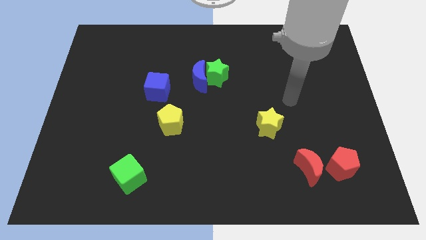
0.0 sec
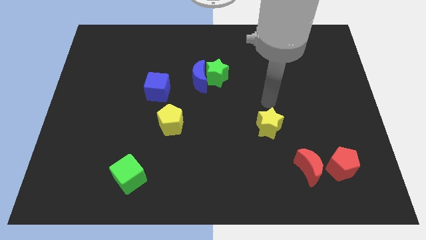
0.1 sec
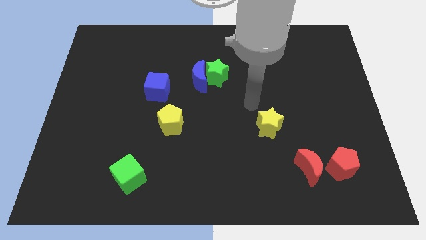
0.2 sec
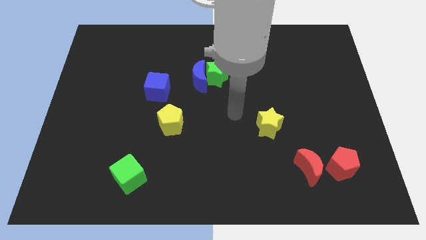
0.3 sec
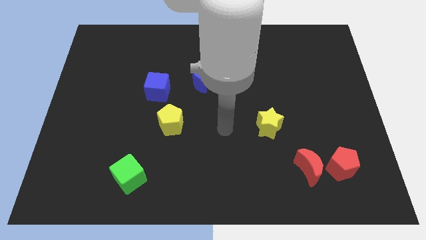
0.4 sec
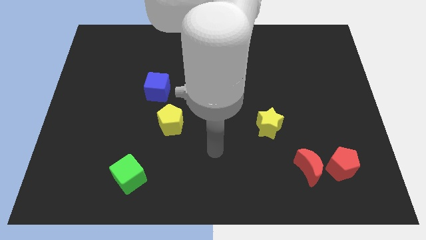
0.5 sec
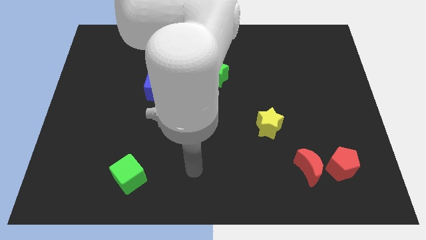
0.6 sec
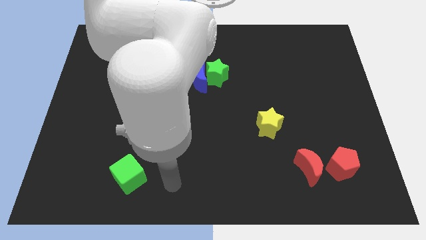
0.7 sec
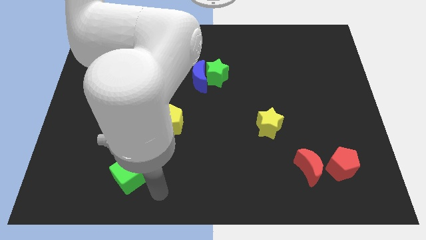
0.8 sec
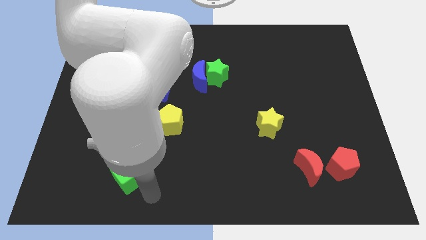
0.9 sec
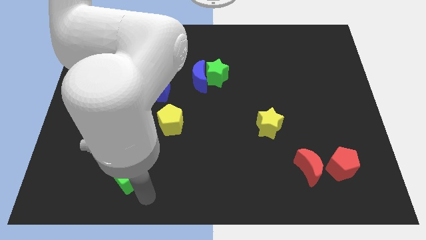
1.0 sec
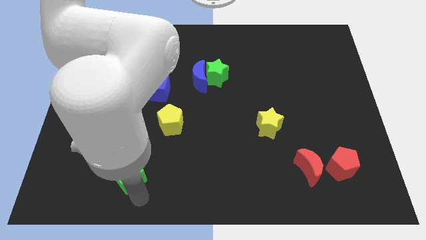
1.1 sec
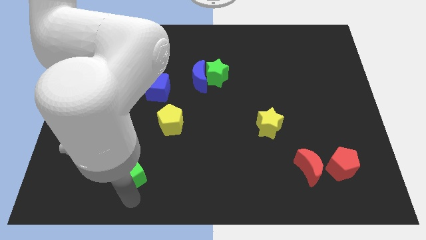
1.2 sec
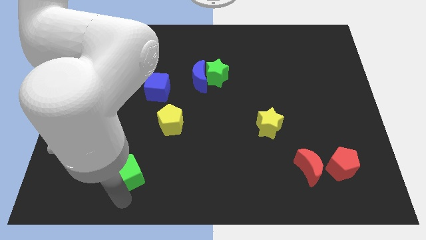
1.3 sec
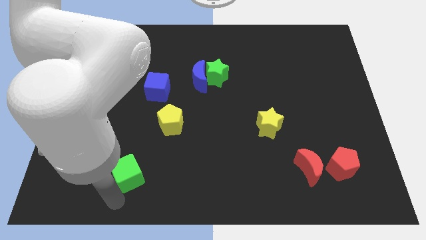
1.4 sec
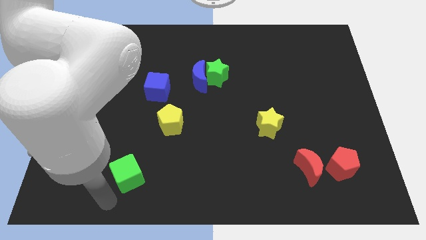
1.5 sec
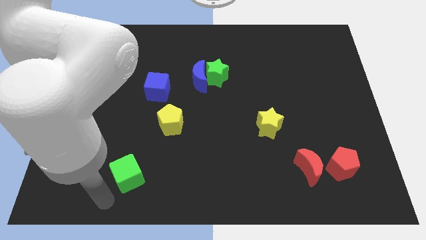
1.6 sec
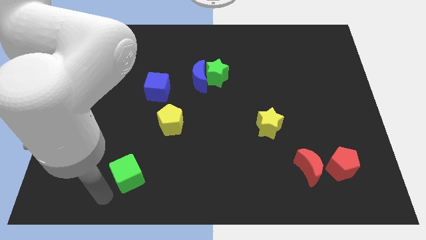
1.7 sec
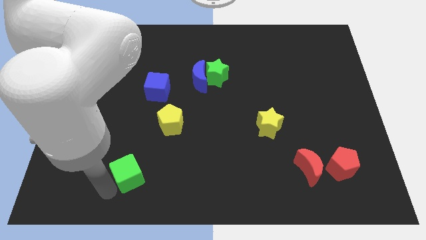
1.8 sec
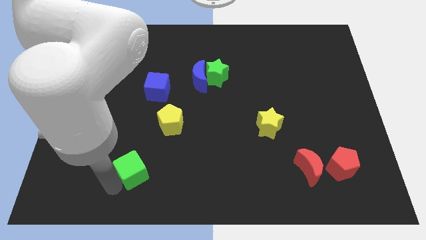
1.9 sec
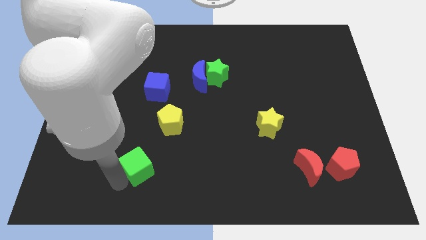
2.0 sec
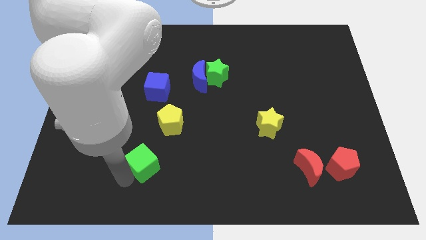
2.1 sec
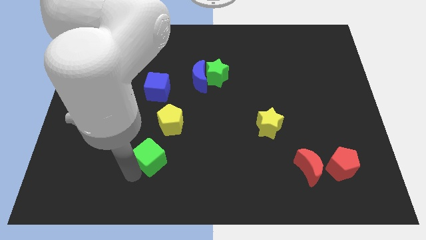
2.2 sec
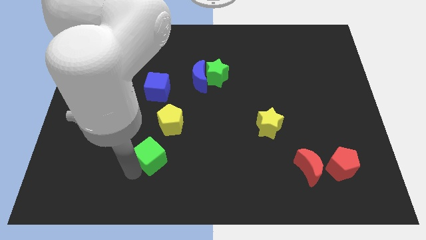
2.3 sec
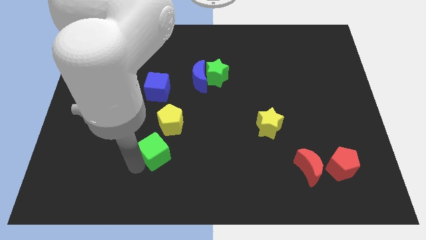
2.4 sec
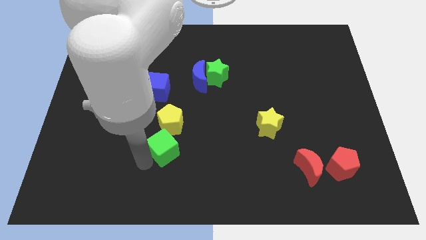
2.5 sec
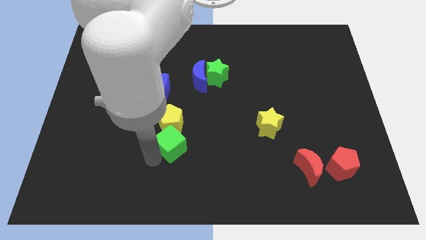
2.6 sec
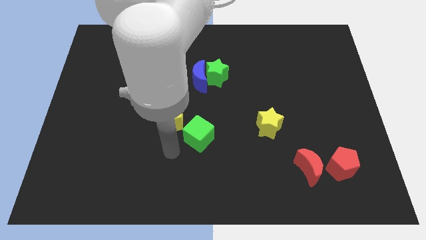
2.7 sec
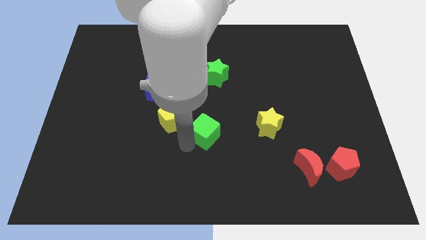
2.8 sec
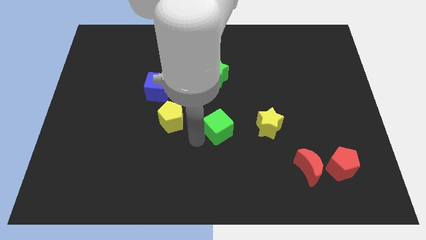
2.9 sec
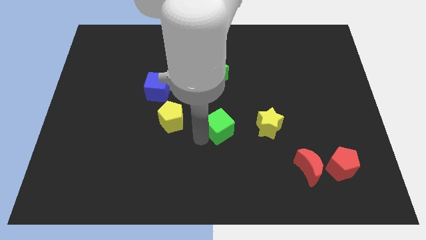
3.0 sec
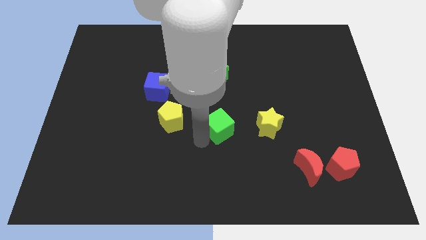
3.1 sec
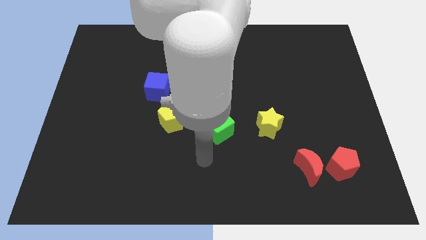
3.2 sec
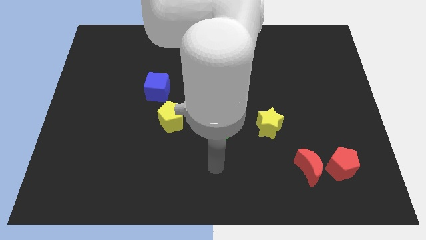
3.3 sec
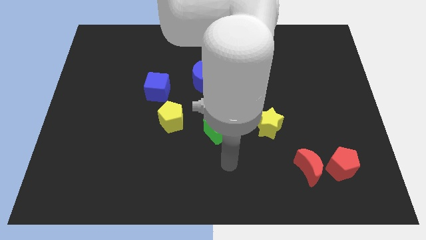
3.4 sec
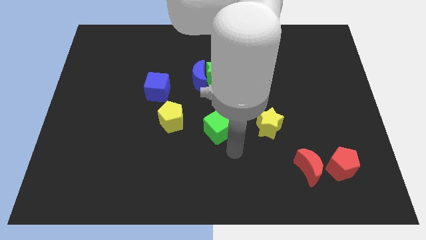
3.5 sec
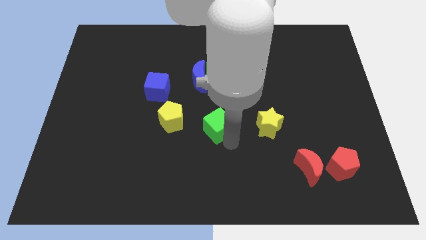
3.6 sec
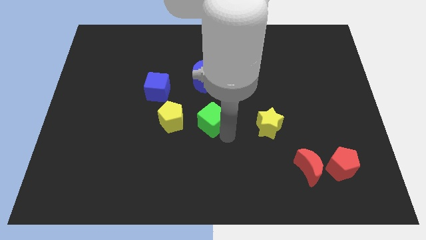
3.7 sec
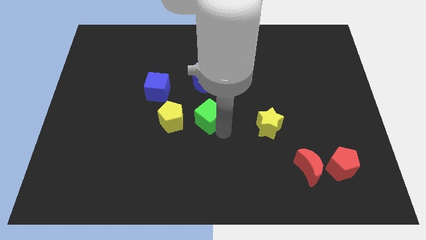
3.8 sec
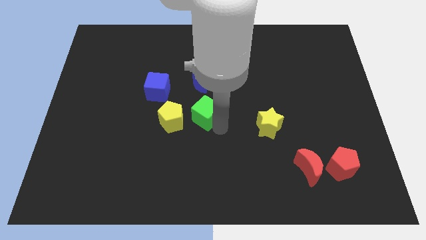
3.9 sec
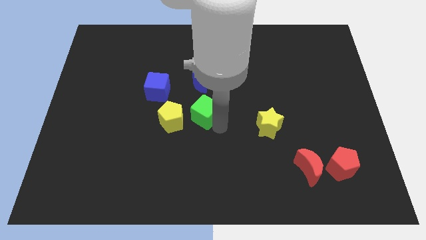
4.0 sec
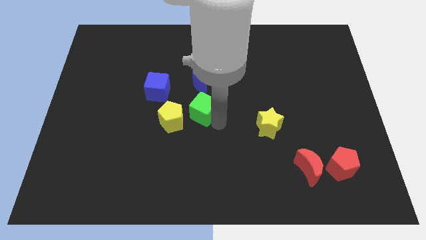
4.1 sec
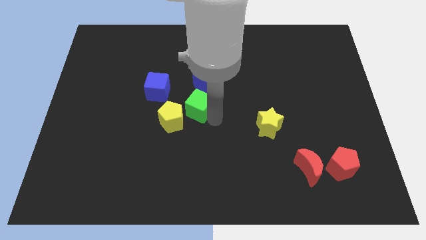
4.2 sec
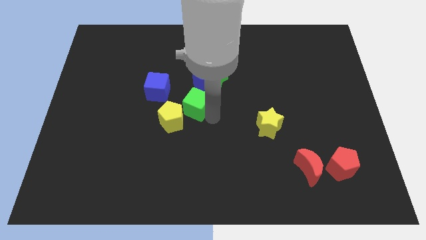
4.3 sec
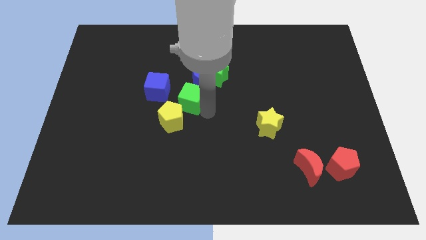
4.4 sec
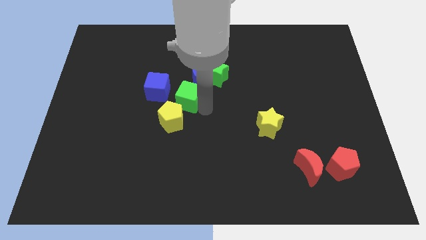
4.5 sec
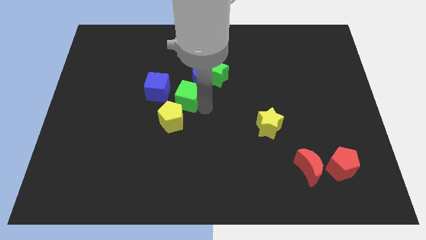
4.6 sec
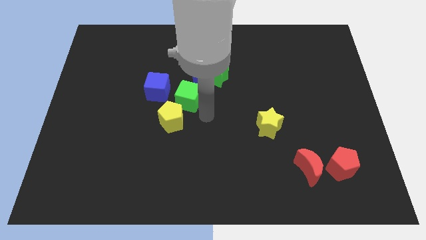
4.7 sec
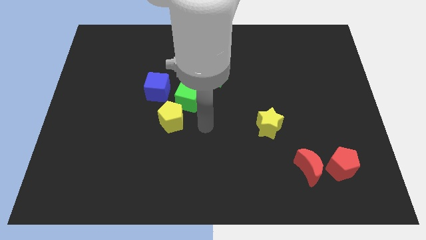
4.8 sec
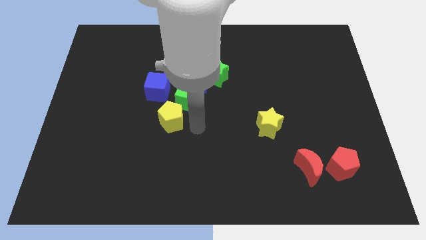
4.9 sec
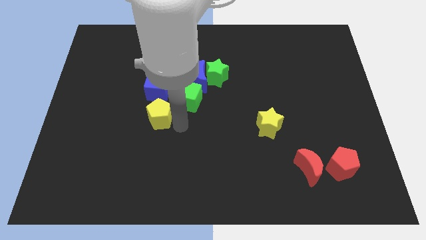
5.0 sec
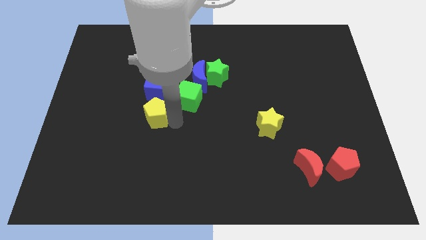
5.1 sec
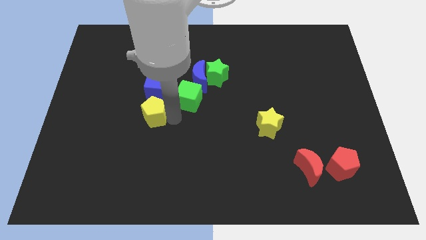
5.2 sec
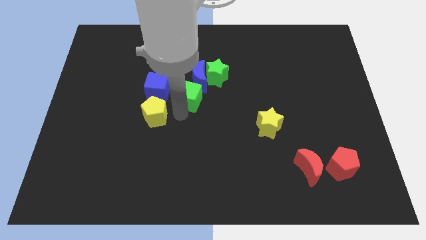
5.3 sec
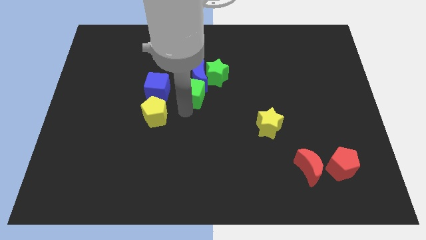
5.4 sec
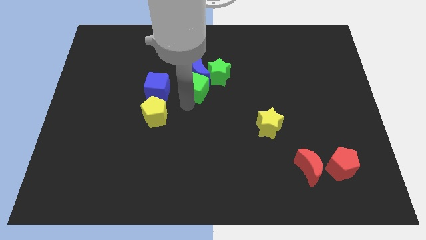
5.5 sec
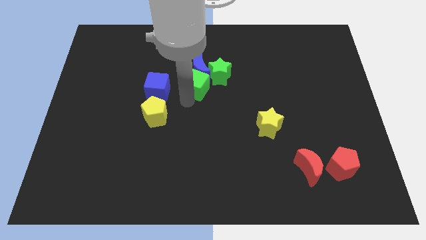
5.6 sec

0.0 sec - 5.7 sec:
push the green cube next to the blue moon

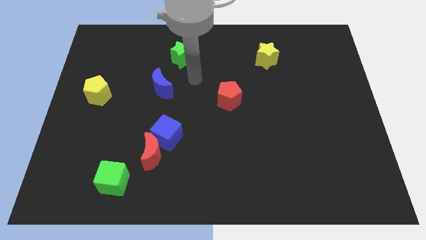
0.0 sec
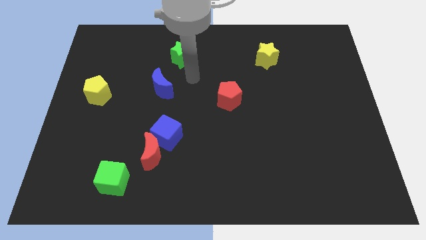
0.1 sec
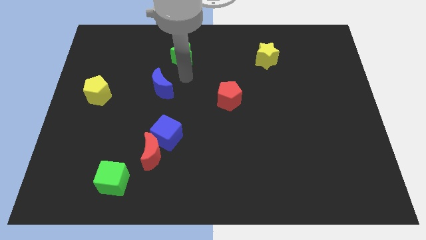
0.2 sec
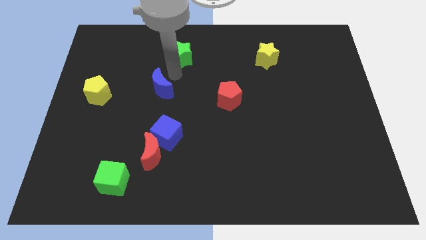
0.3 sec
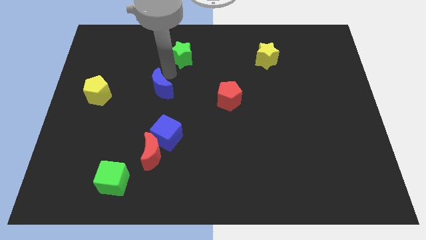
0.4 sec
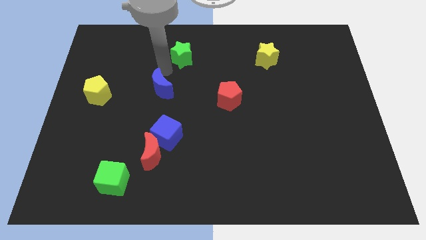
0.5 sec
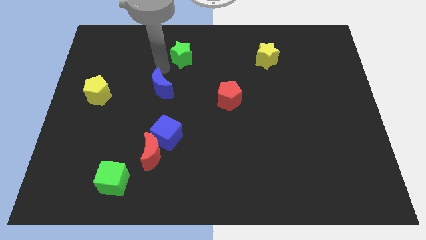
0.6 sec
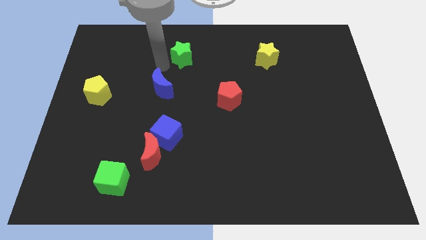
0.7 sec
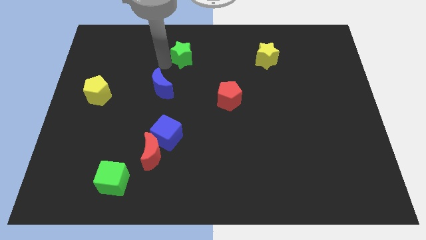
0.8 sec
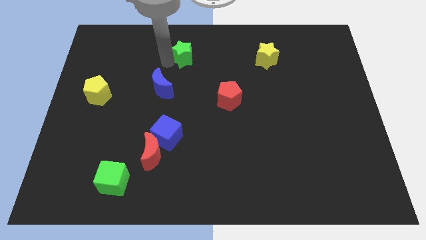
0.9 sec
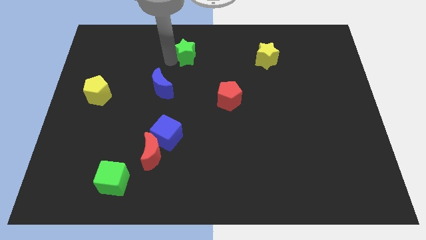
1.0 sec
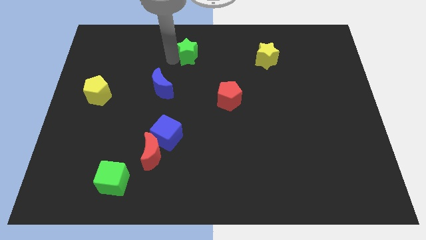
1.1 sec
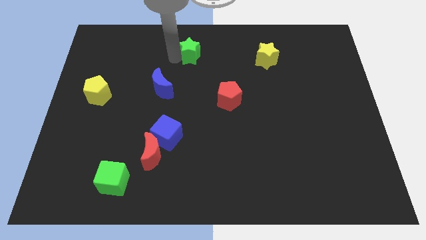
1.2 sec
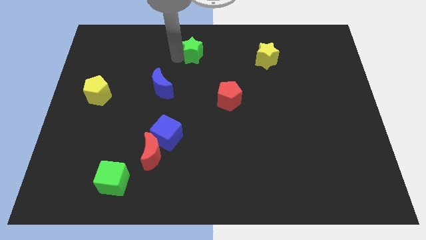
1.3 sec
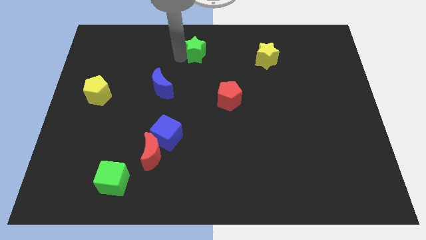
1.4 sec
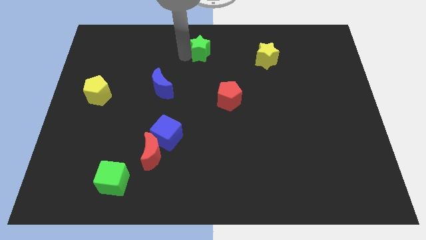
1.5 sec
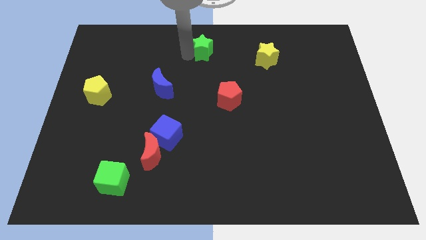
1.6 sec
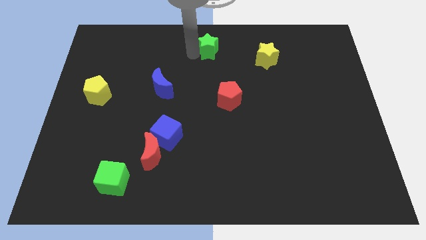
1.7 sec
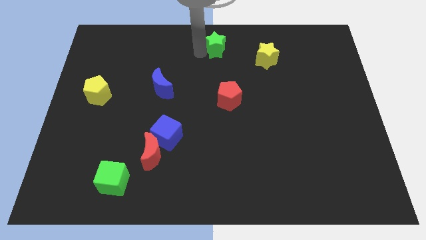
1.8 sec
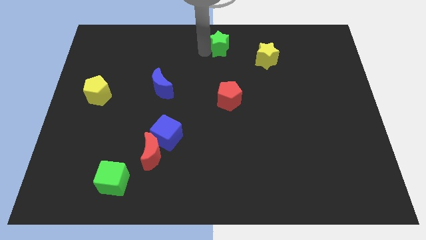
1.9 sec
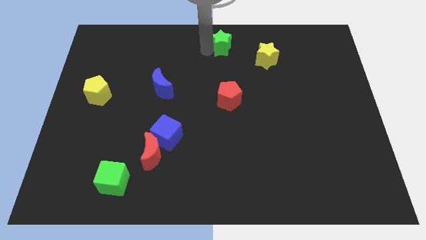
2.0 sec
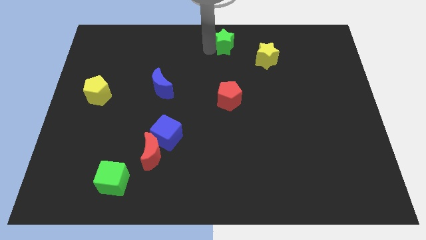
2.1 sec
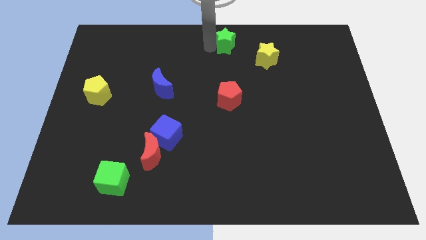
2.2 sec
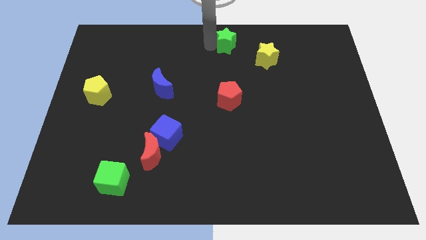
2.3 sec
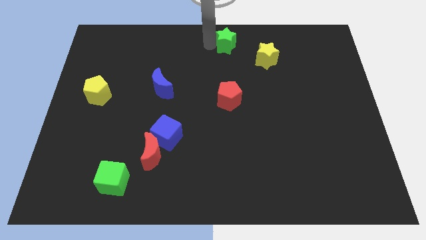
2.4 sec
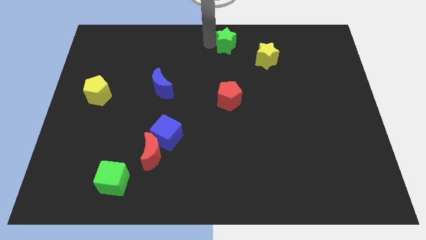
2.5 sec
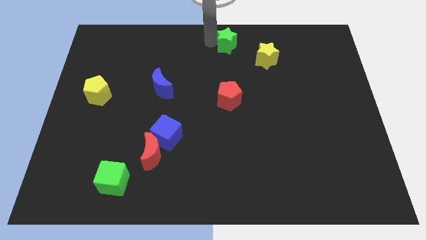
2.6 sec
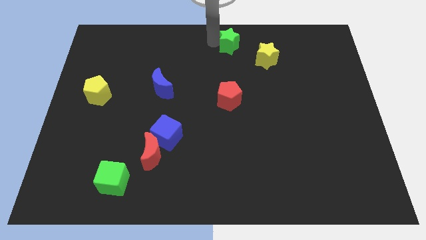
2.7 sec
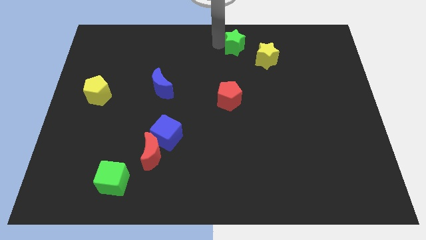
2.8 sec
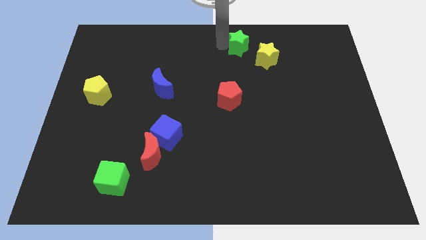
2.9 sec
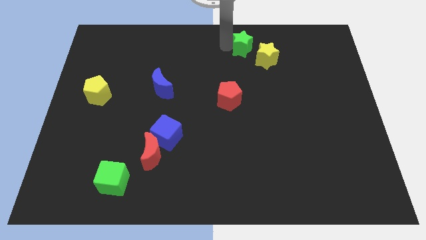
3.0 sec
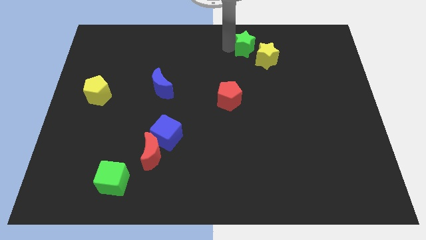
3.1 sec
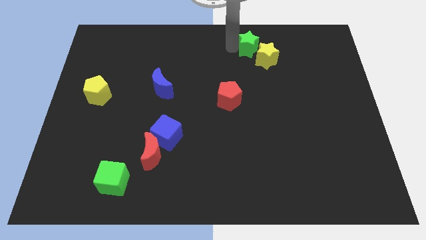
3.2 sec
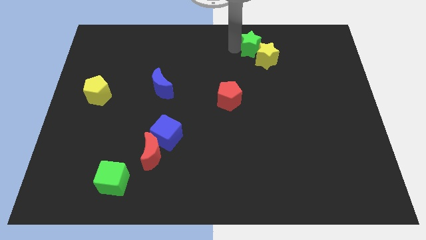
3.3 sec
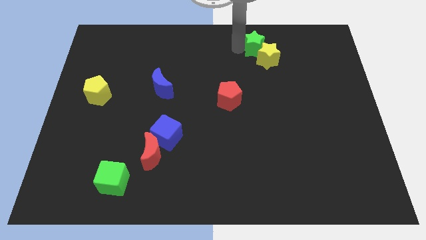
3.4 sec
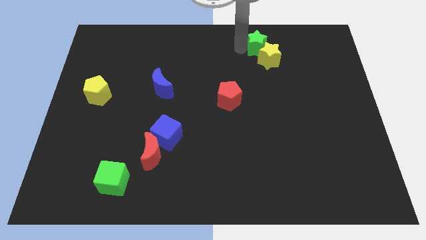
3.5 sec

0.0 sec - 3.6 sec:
move the green star towards the yellow star
